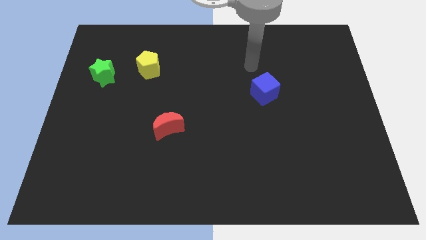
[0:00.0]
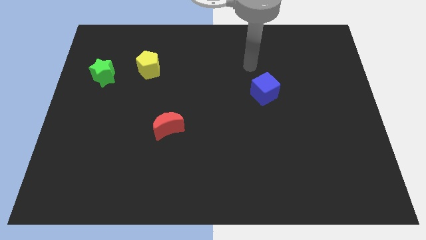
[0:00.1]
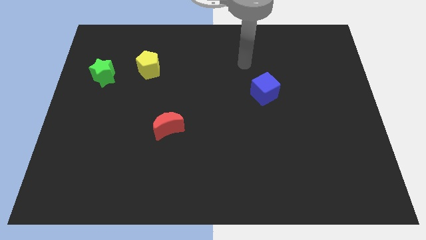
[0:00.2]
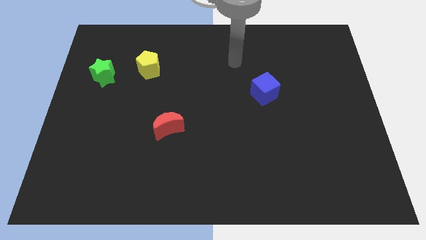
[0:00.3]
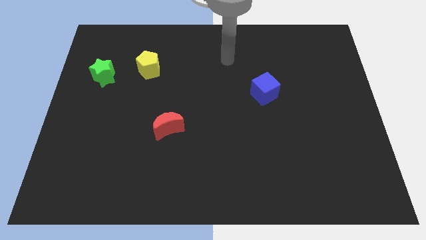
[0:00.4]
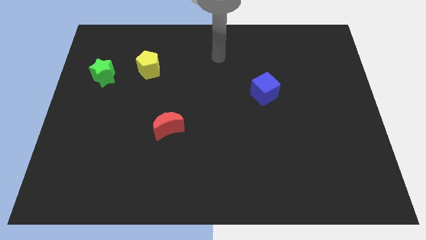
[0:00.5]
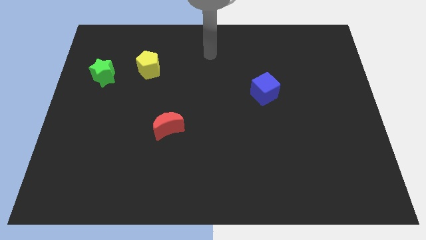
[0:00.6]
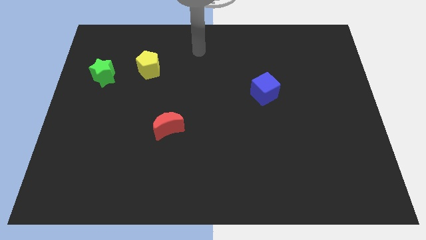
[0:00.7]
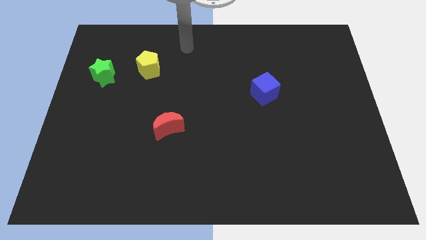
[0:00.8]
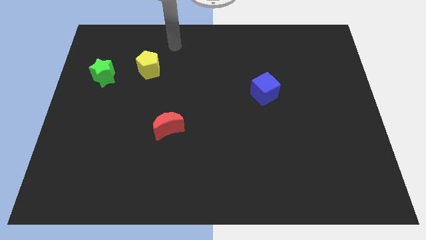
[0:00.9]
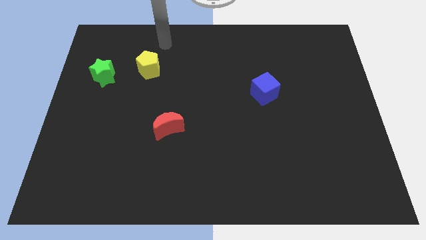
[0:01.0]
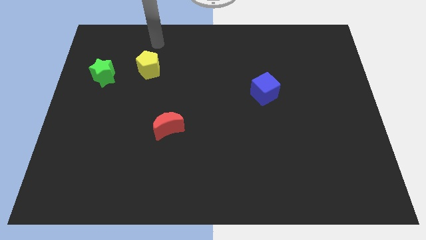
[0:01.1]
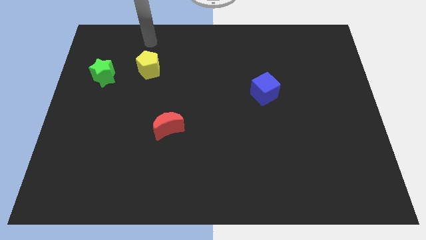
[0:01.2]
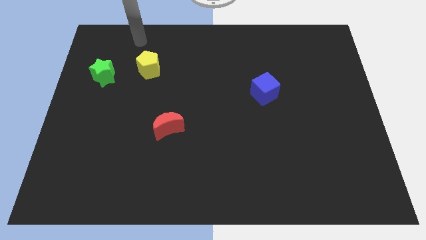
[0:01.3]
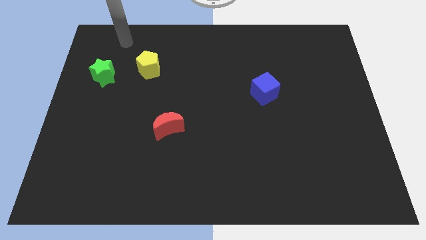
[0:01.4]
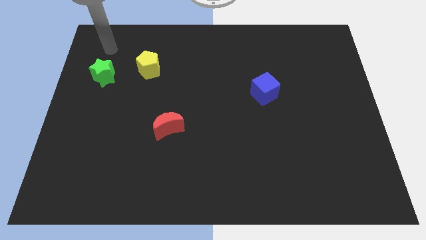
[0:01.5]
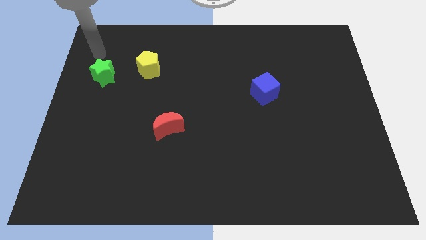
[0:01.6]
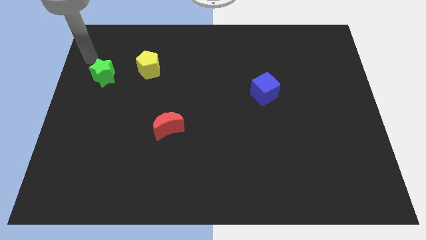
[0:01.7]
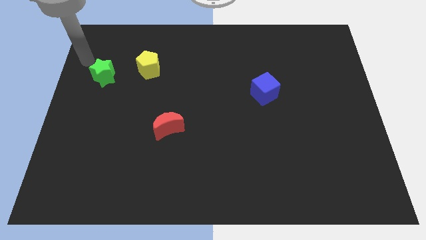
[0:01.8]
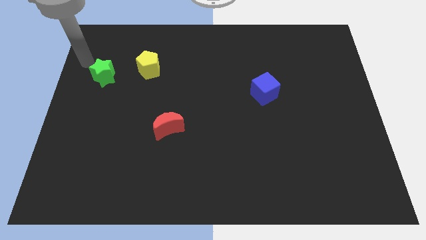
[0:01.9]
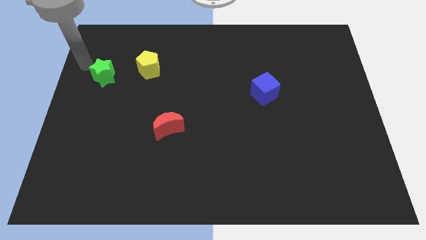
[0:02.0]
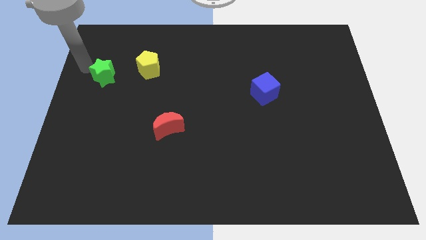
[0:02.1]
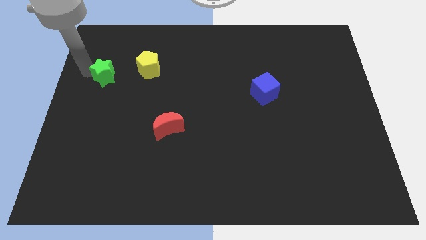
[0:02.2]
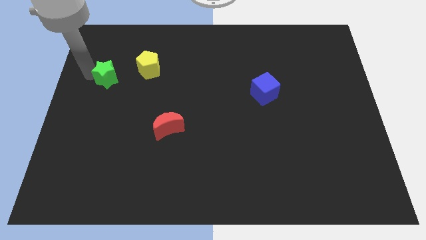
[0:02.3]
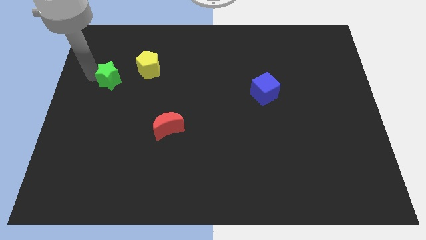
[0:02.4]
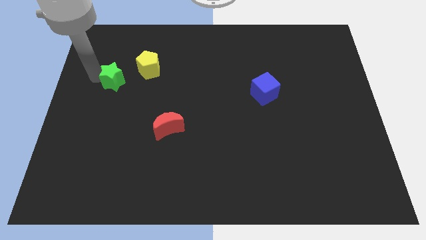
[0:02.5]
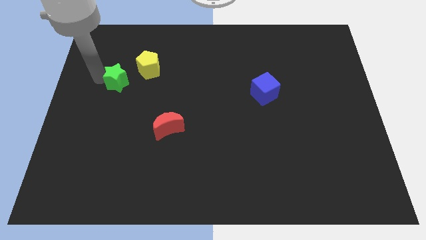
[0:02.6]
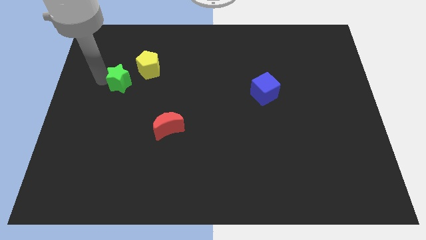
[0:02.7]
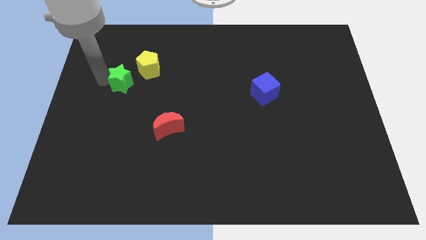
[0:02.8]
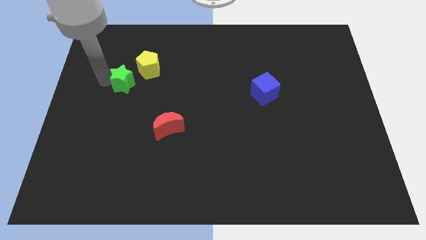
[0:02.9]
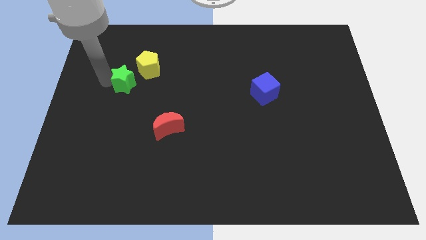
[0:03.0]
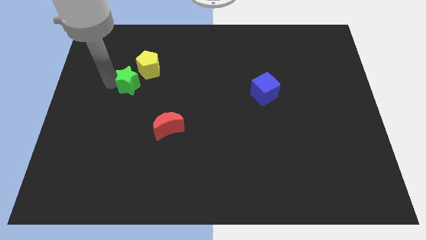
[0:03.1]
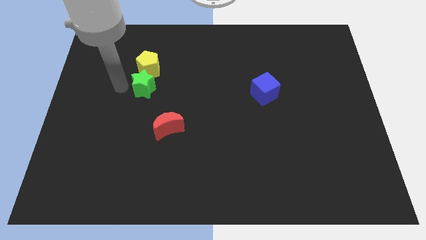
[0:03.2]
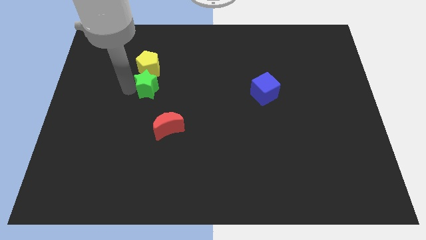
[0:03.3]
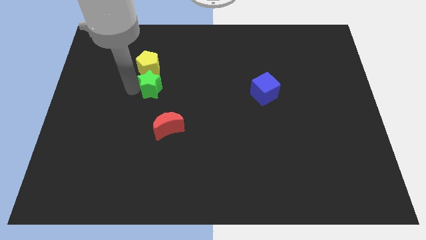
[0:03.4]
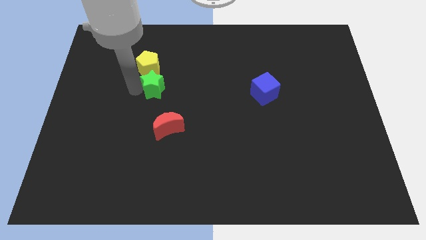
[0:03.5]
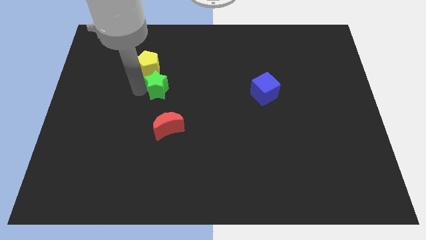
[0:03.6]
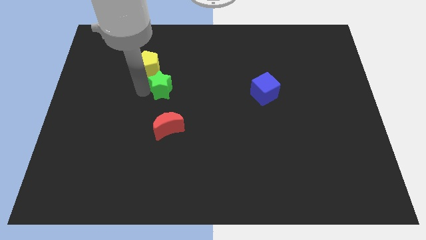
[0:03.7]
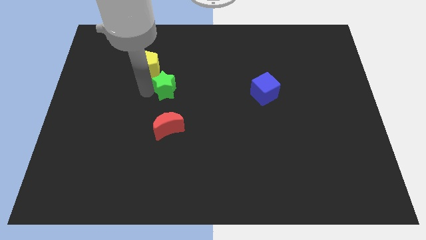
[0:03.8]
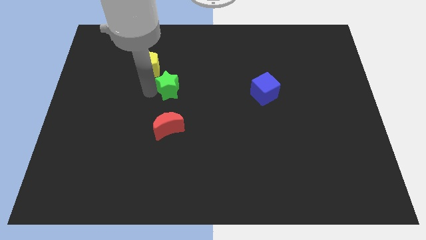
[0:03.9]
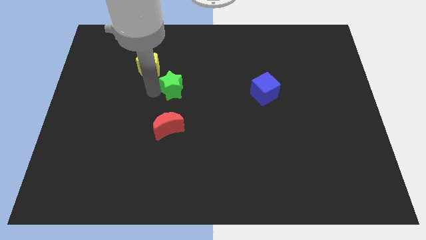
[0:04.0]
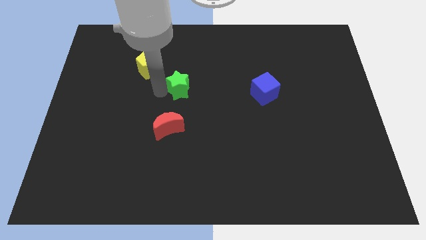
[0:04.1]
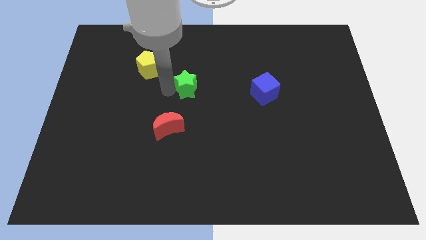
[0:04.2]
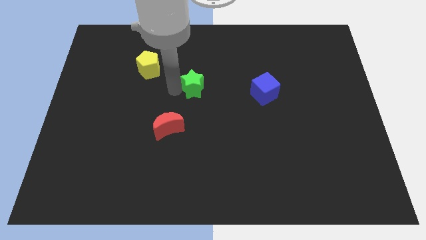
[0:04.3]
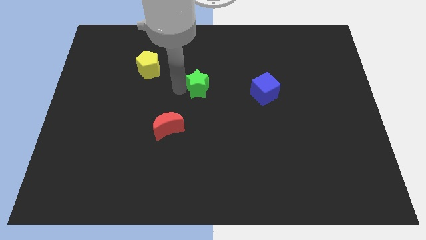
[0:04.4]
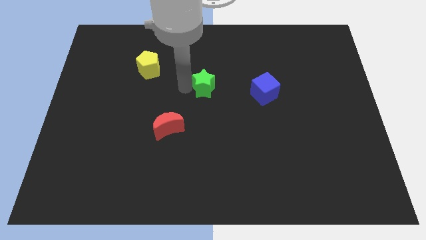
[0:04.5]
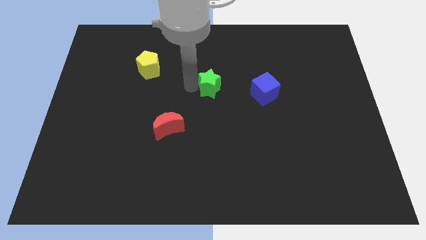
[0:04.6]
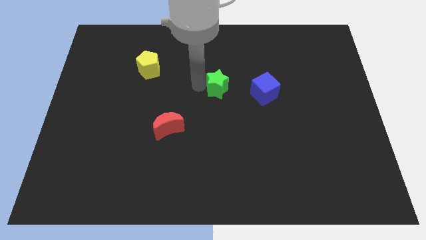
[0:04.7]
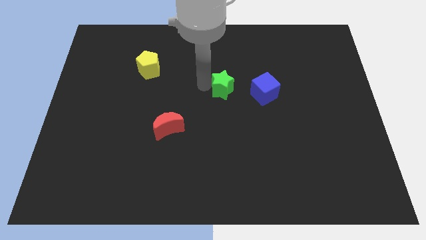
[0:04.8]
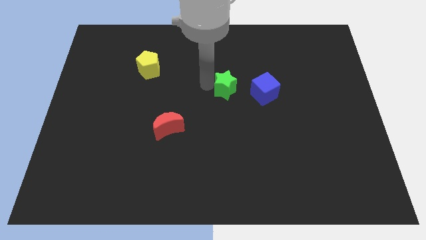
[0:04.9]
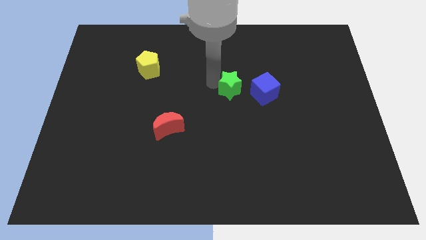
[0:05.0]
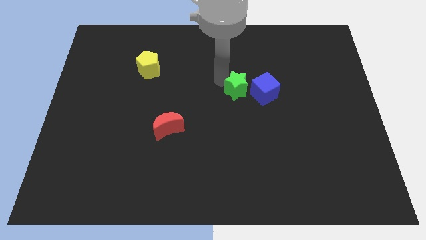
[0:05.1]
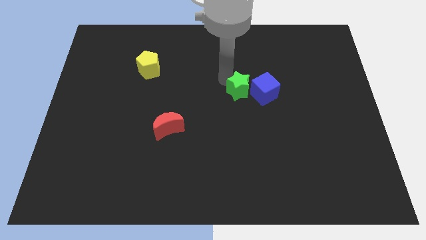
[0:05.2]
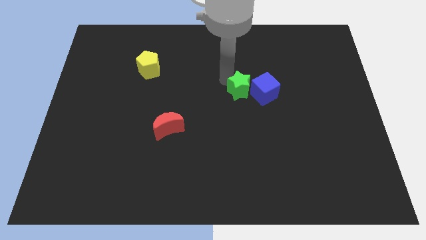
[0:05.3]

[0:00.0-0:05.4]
move the star towards the blue cube

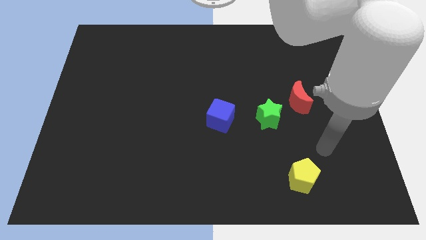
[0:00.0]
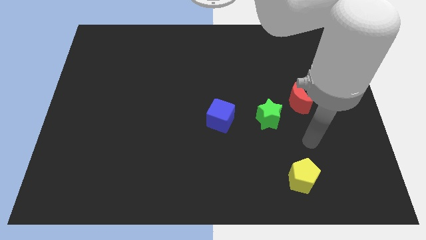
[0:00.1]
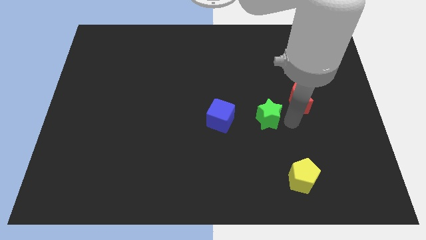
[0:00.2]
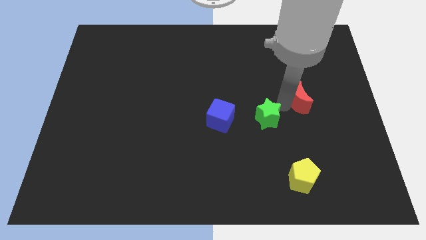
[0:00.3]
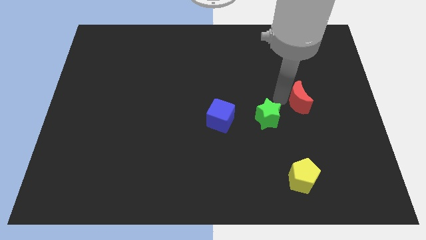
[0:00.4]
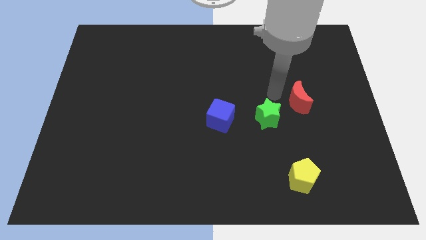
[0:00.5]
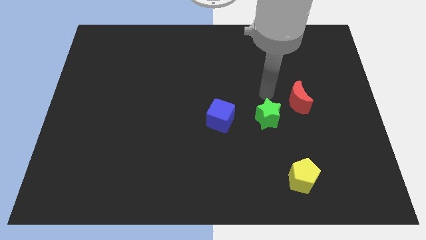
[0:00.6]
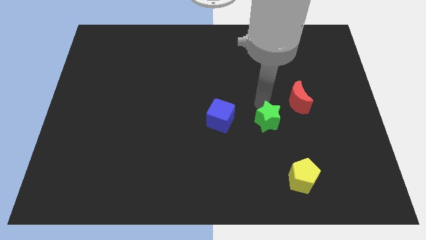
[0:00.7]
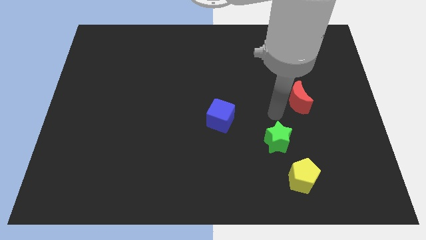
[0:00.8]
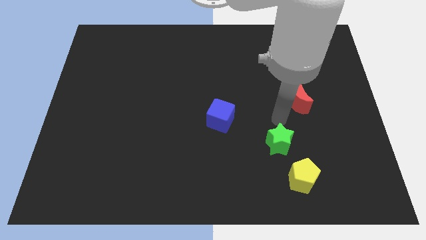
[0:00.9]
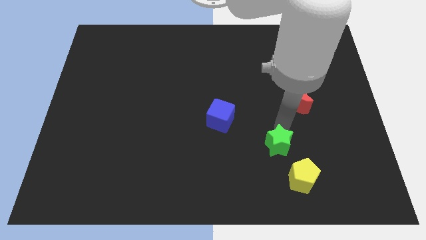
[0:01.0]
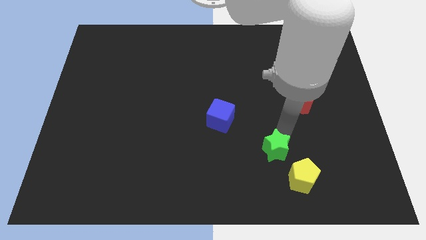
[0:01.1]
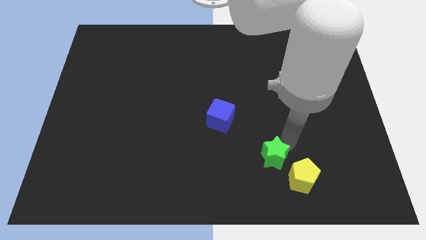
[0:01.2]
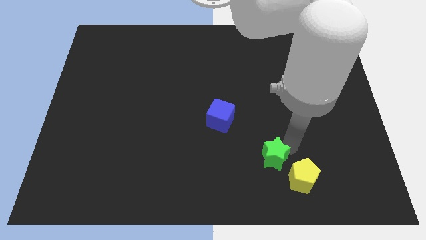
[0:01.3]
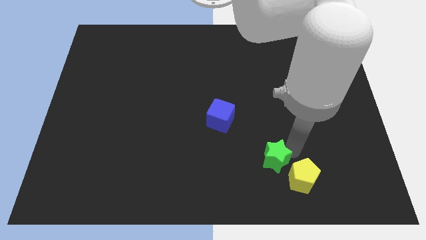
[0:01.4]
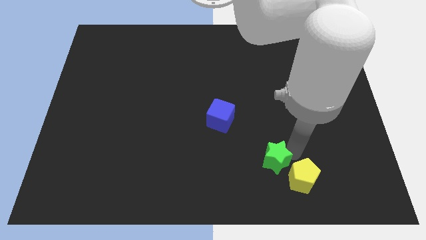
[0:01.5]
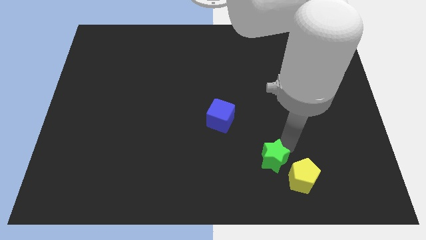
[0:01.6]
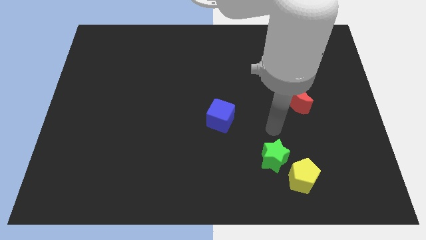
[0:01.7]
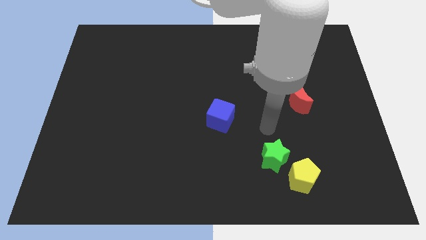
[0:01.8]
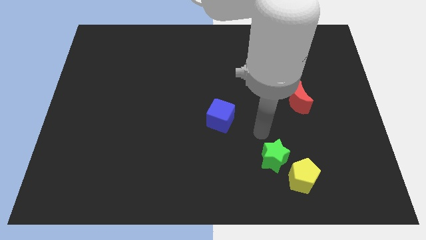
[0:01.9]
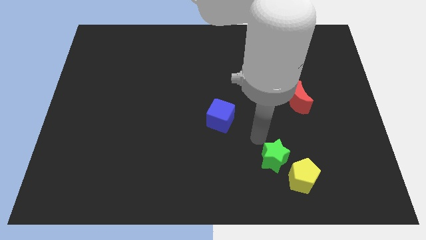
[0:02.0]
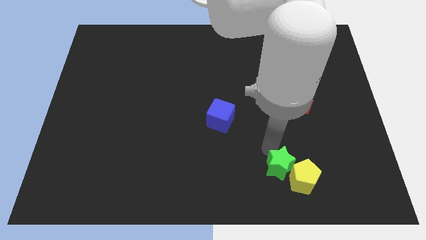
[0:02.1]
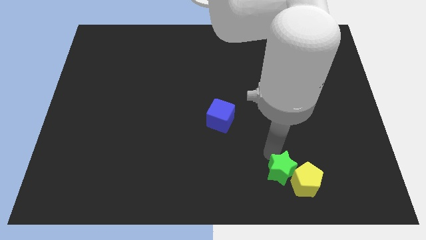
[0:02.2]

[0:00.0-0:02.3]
slide the green block to the pentagon

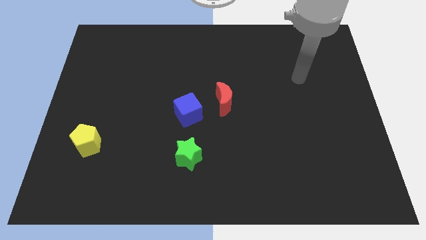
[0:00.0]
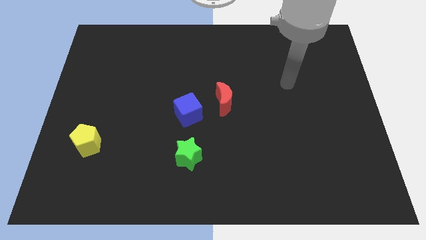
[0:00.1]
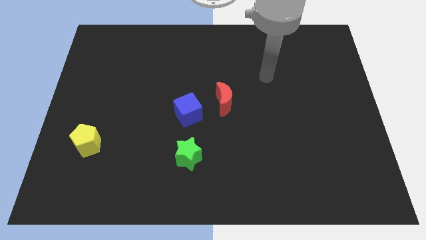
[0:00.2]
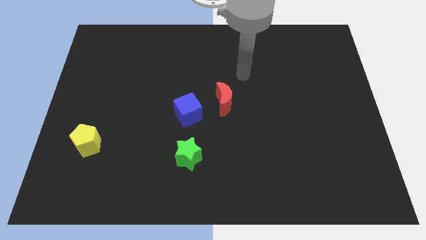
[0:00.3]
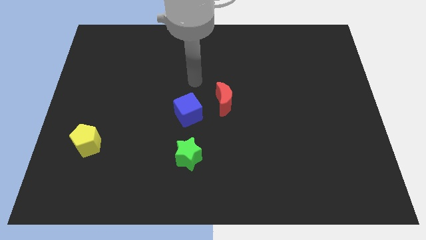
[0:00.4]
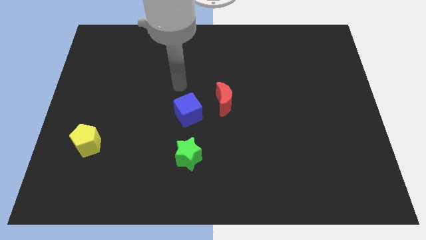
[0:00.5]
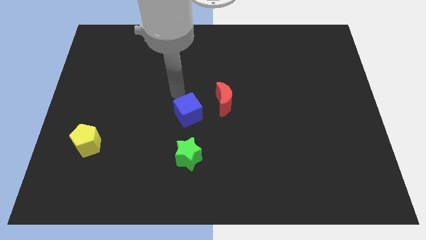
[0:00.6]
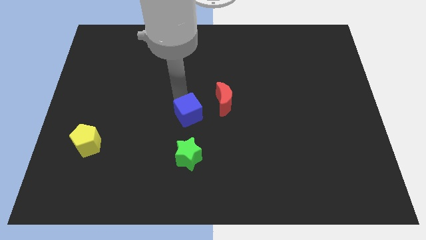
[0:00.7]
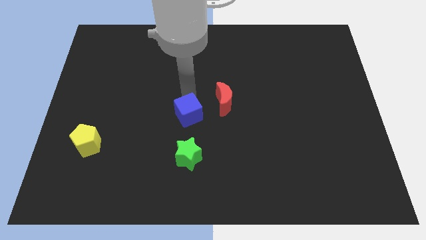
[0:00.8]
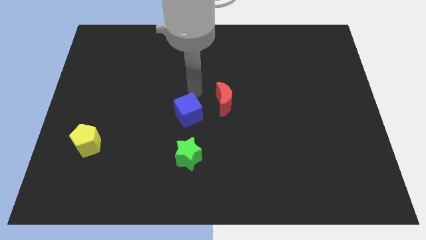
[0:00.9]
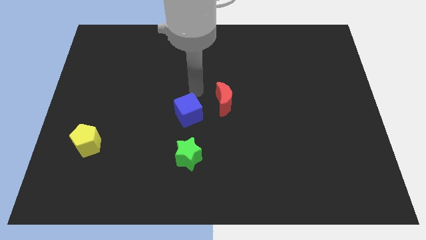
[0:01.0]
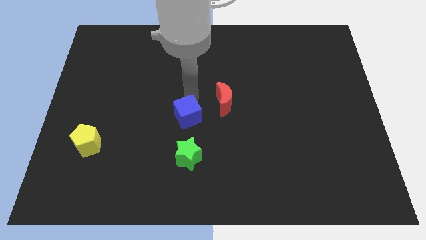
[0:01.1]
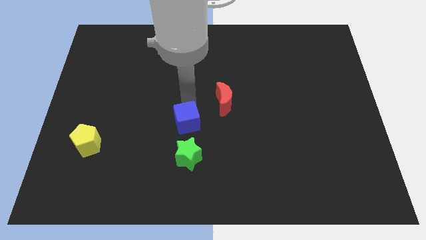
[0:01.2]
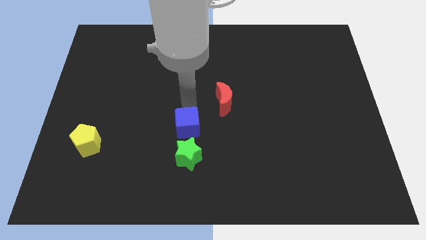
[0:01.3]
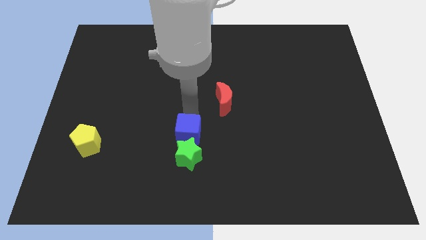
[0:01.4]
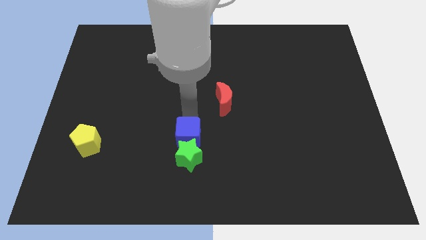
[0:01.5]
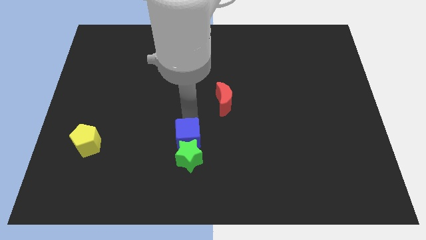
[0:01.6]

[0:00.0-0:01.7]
slide the blue block towards the green star
